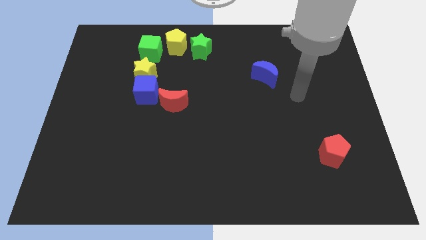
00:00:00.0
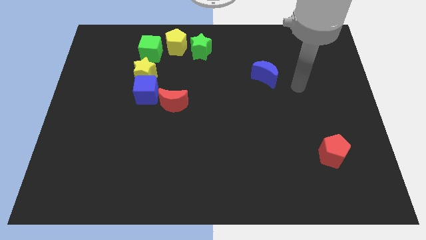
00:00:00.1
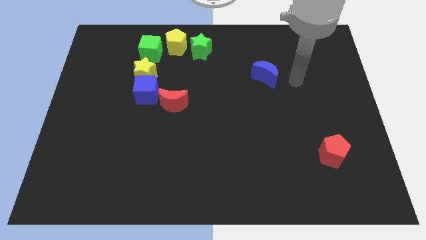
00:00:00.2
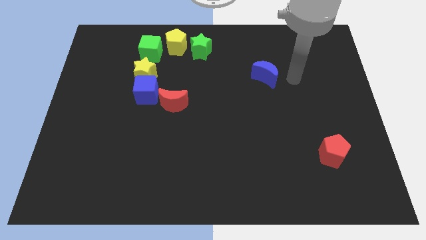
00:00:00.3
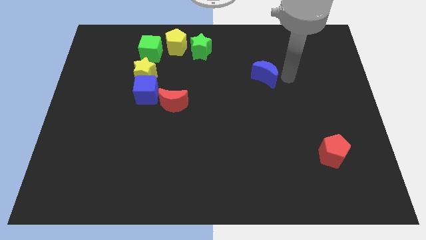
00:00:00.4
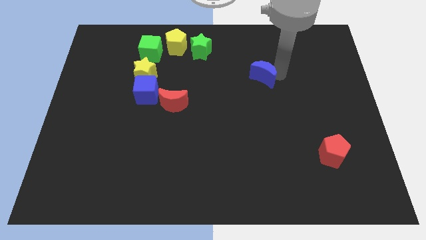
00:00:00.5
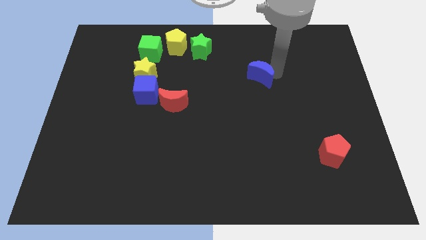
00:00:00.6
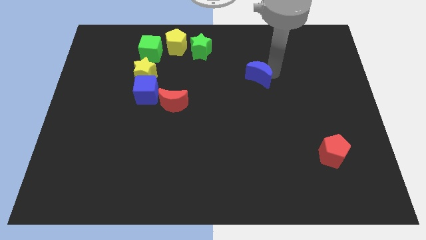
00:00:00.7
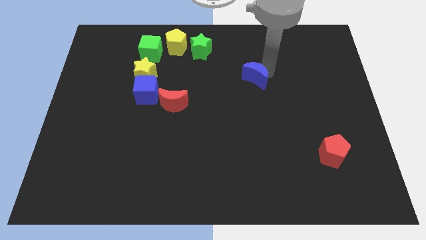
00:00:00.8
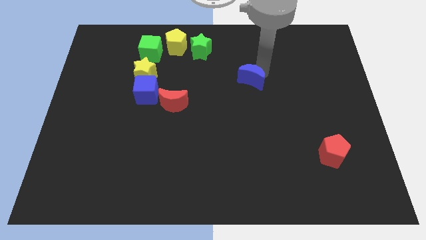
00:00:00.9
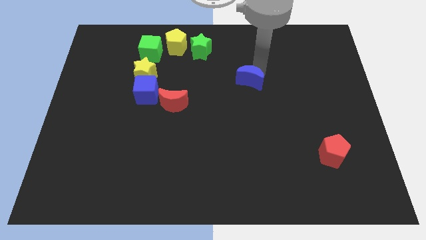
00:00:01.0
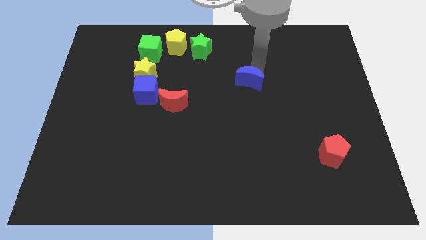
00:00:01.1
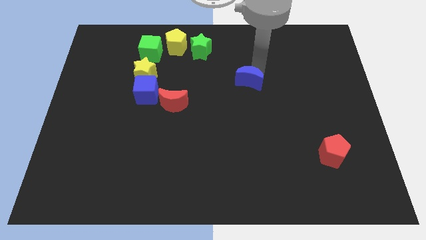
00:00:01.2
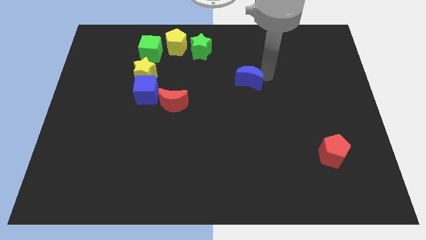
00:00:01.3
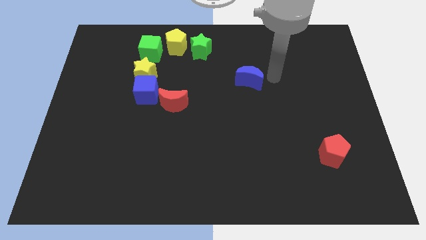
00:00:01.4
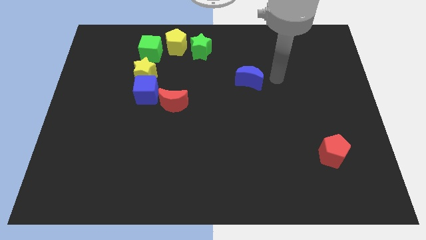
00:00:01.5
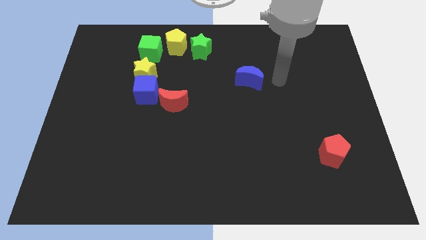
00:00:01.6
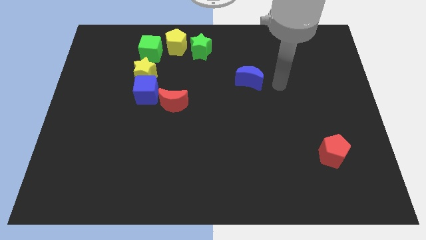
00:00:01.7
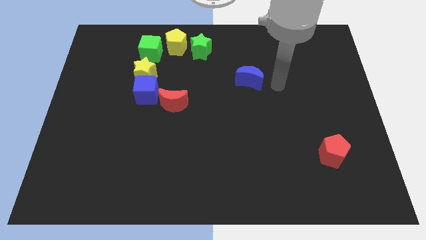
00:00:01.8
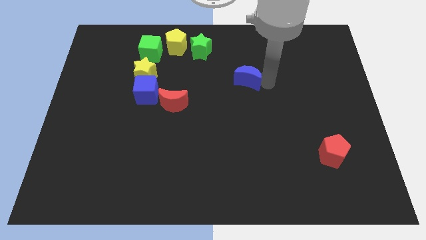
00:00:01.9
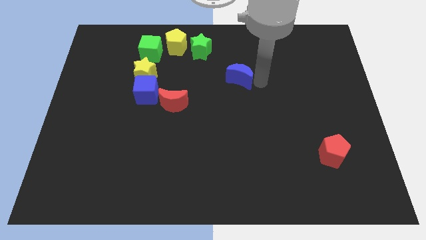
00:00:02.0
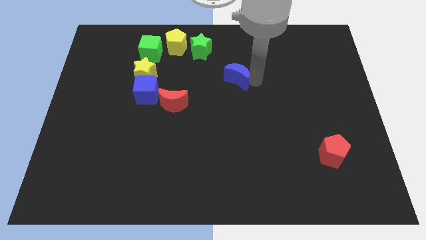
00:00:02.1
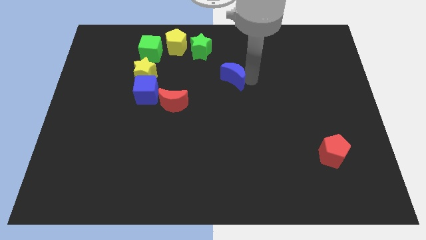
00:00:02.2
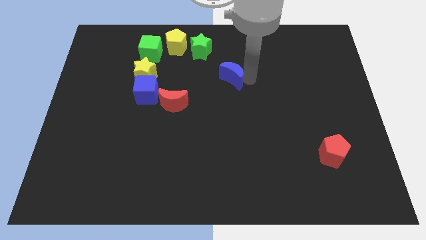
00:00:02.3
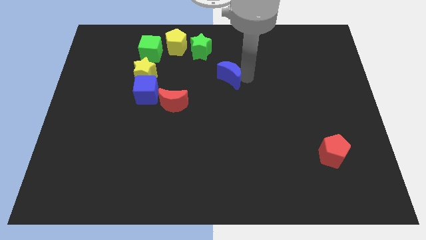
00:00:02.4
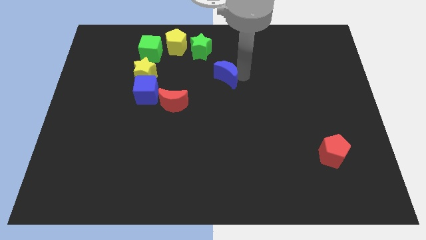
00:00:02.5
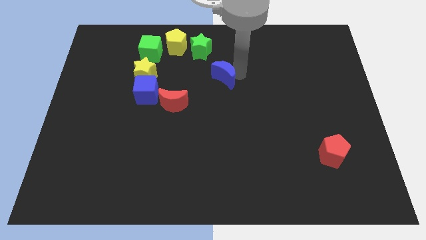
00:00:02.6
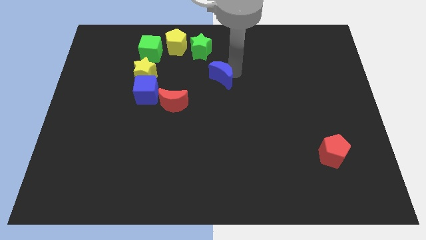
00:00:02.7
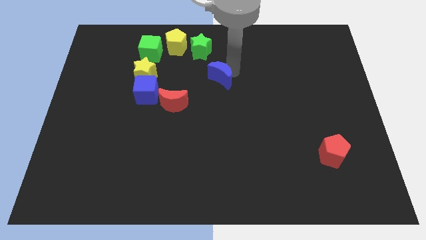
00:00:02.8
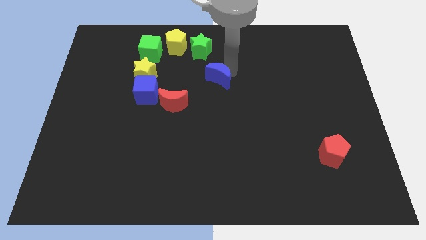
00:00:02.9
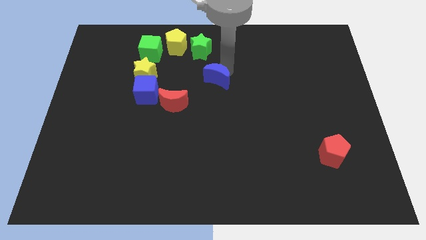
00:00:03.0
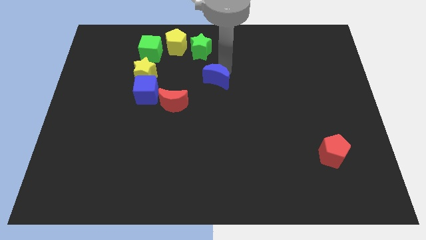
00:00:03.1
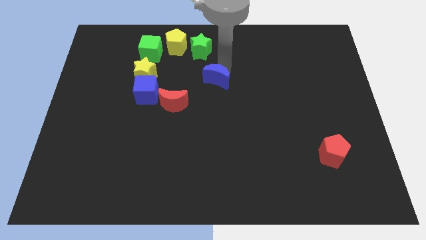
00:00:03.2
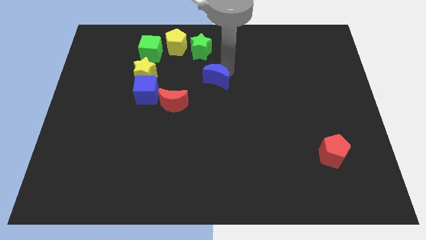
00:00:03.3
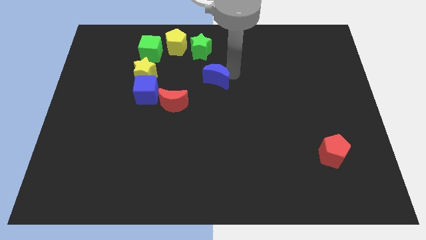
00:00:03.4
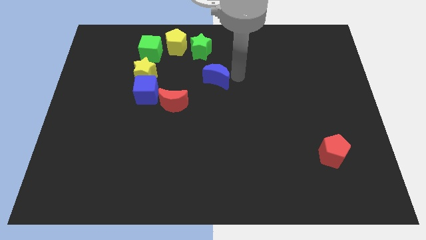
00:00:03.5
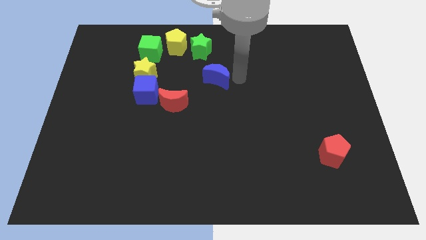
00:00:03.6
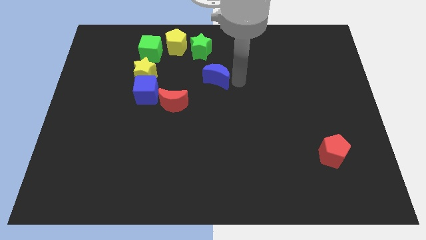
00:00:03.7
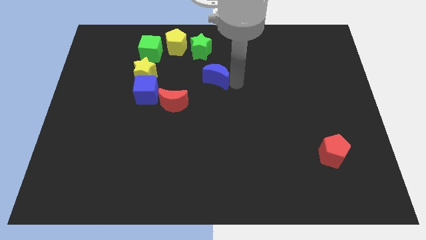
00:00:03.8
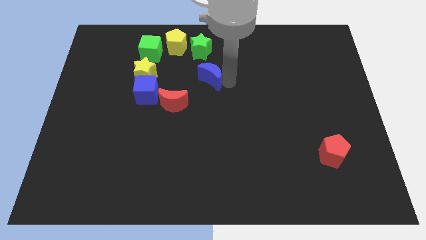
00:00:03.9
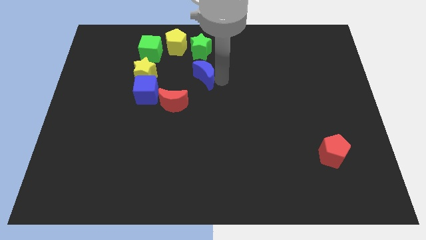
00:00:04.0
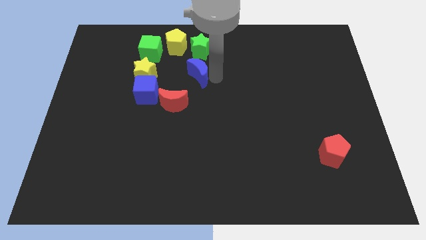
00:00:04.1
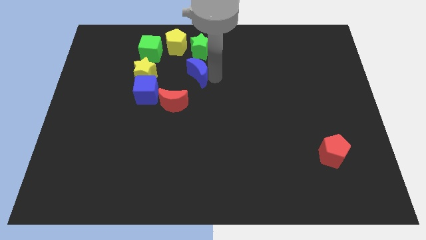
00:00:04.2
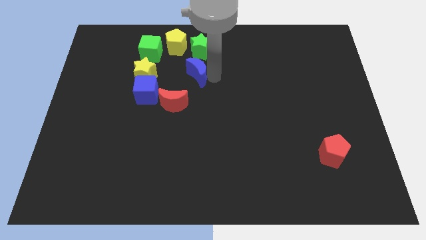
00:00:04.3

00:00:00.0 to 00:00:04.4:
move the blue crescent vertically below to the green star

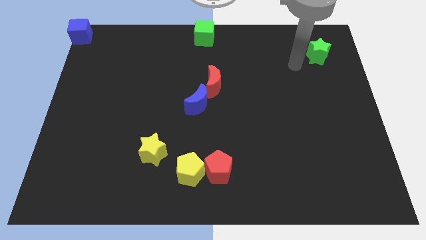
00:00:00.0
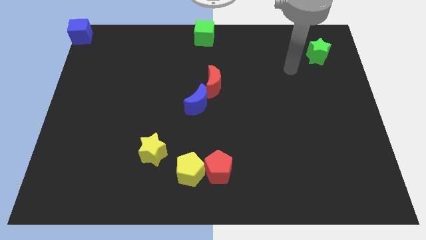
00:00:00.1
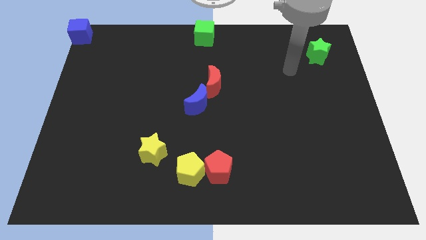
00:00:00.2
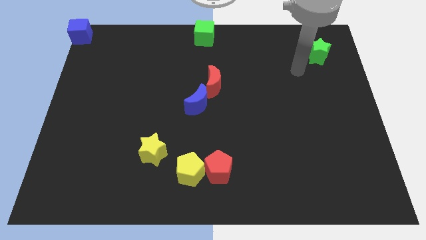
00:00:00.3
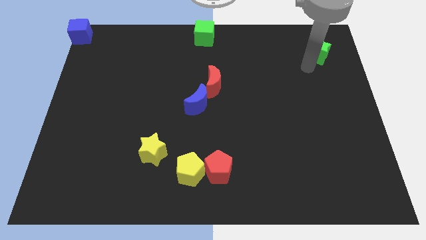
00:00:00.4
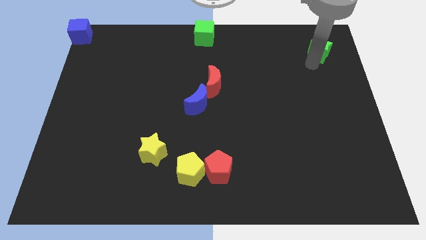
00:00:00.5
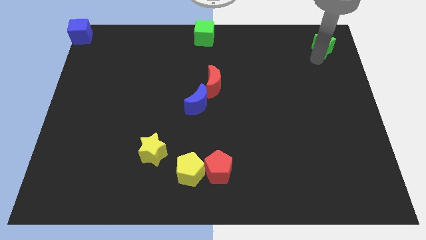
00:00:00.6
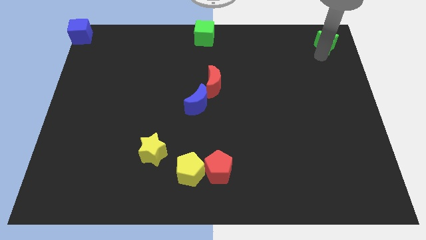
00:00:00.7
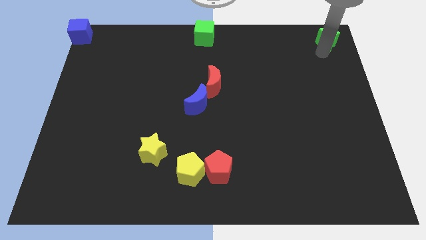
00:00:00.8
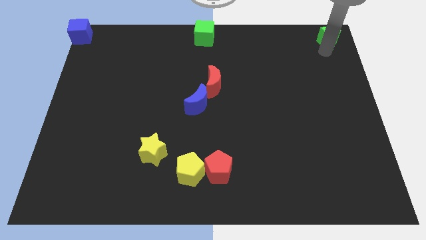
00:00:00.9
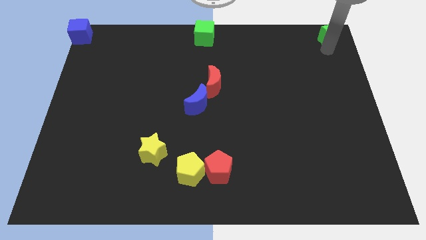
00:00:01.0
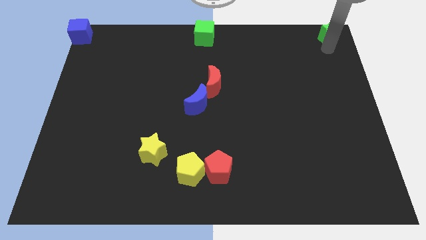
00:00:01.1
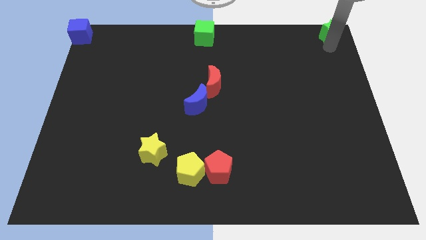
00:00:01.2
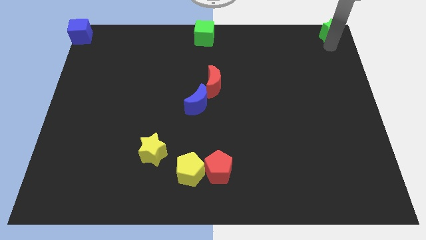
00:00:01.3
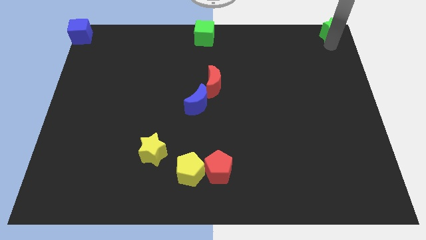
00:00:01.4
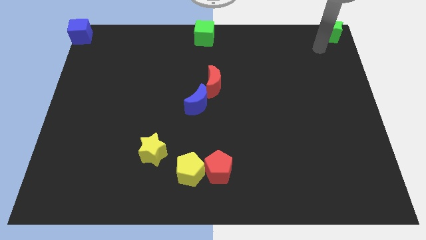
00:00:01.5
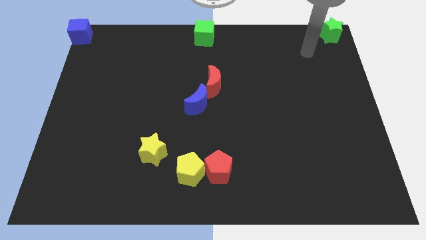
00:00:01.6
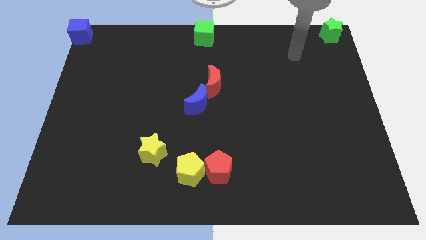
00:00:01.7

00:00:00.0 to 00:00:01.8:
place the green star to the top right corner

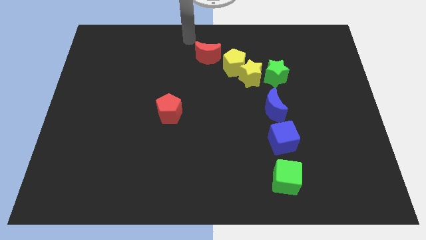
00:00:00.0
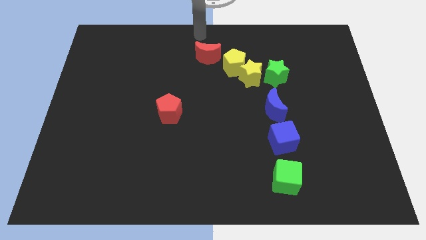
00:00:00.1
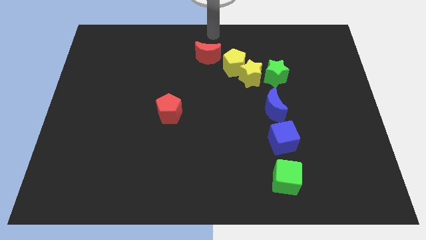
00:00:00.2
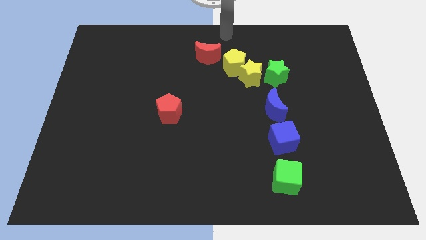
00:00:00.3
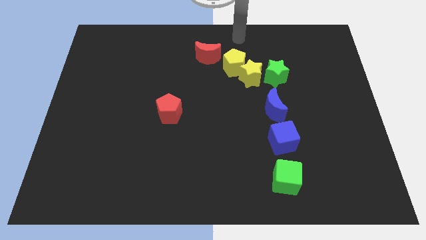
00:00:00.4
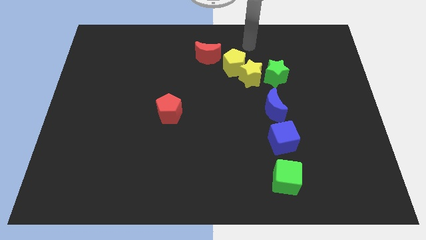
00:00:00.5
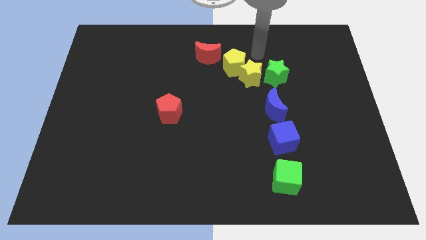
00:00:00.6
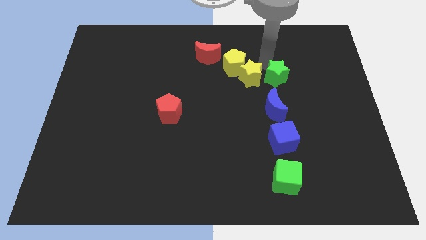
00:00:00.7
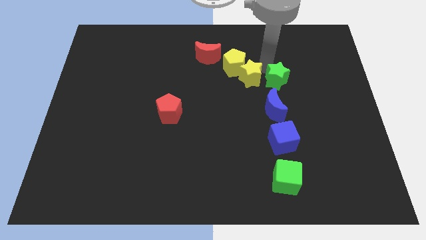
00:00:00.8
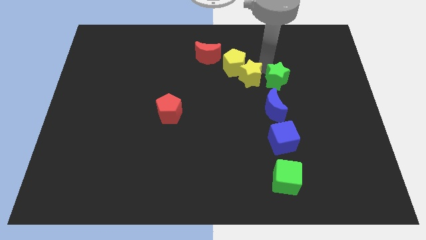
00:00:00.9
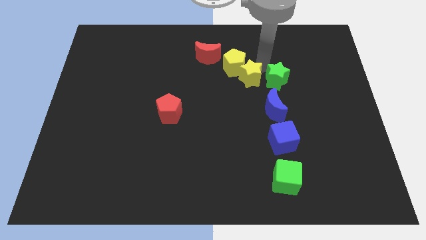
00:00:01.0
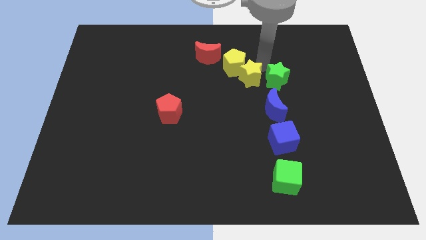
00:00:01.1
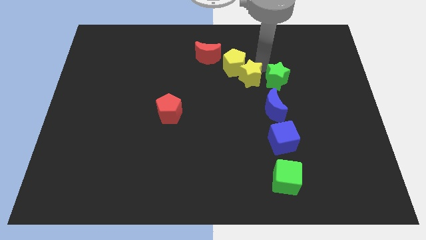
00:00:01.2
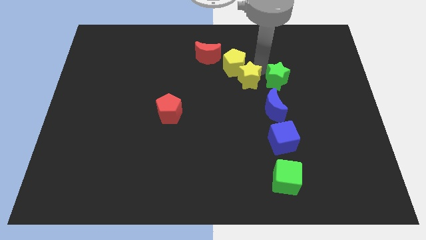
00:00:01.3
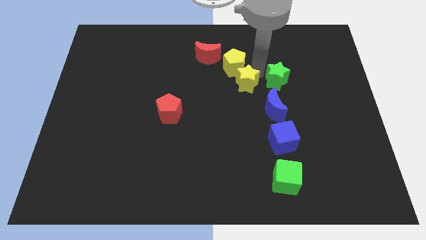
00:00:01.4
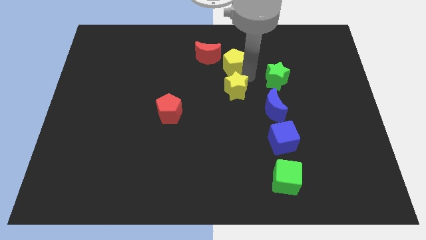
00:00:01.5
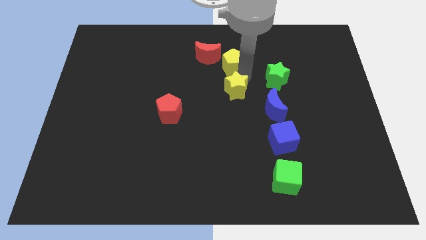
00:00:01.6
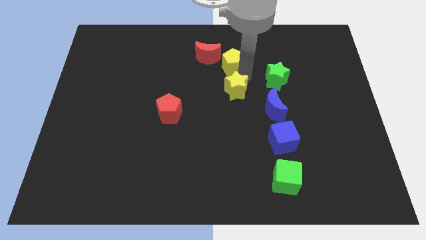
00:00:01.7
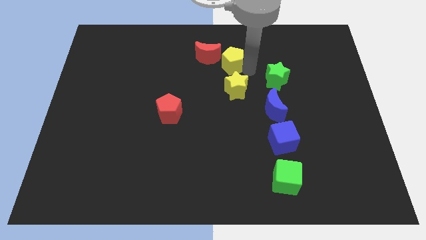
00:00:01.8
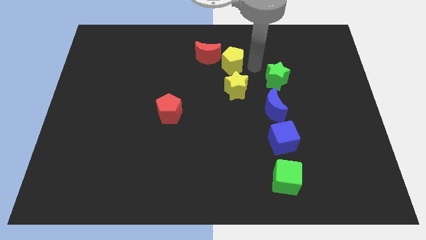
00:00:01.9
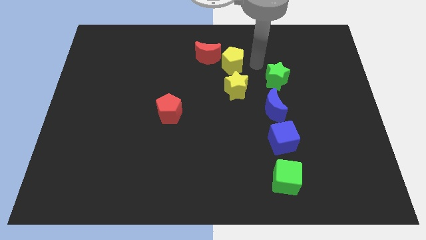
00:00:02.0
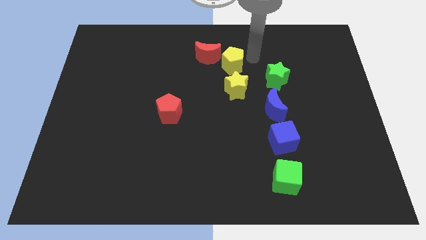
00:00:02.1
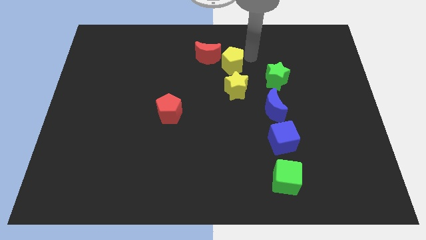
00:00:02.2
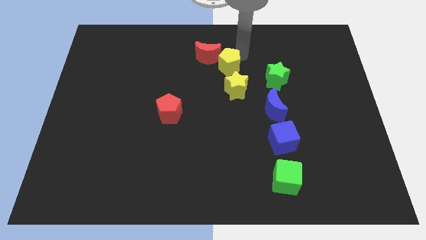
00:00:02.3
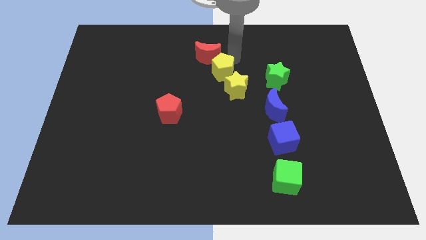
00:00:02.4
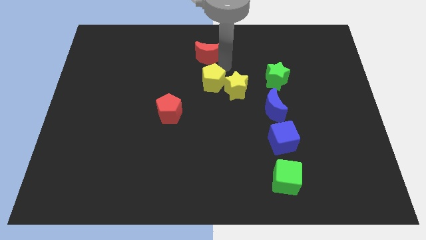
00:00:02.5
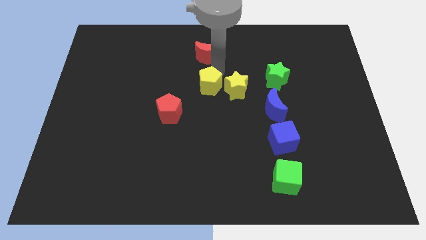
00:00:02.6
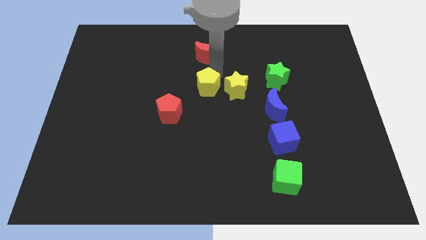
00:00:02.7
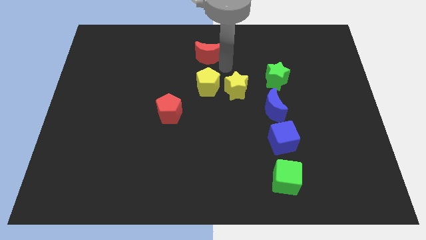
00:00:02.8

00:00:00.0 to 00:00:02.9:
move the yellow star and pentagon towards the center of the board
